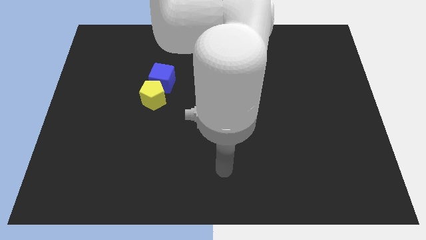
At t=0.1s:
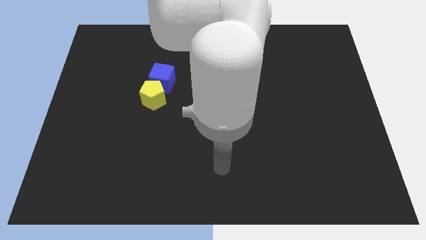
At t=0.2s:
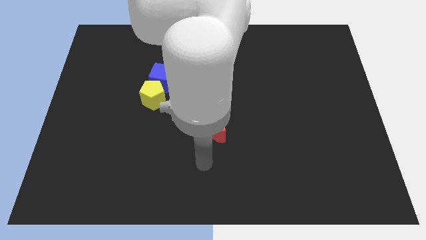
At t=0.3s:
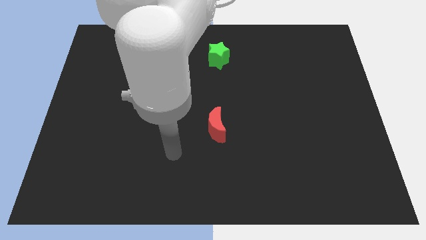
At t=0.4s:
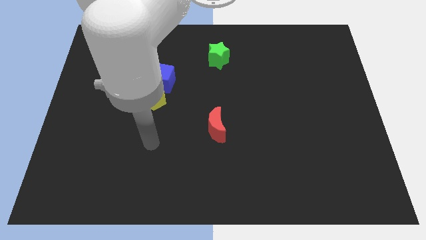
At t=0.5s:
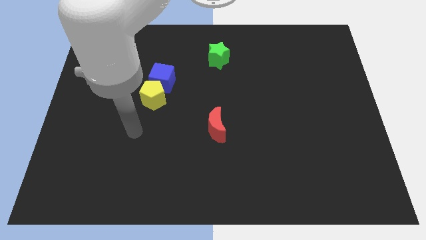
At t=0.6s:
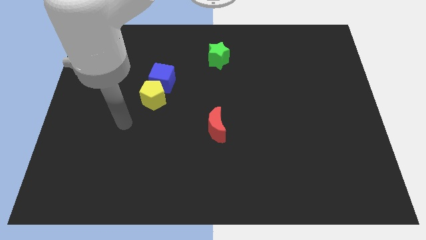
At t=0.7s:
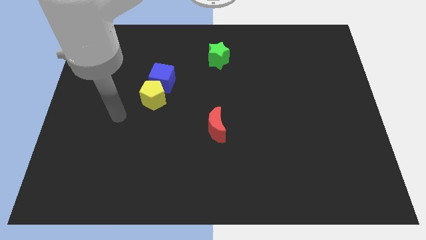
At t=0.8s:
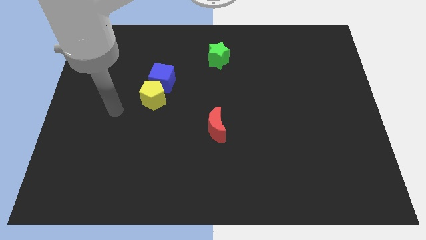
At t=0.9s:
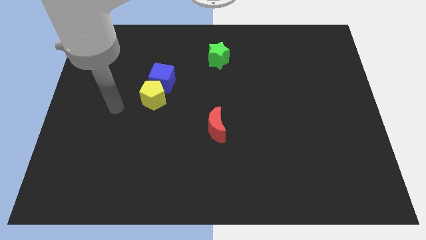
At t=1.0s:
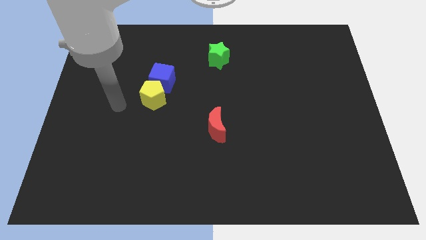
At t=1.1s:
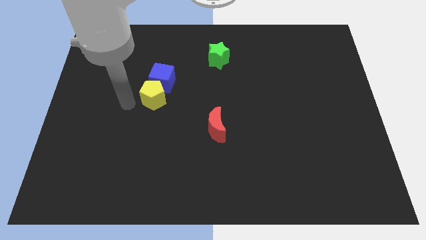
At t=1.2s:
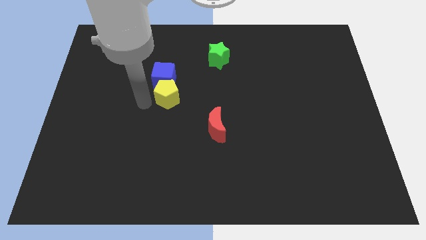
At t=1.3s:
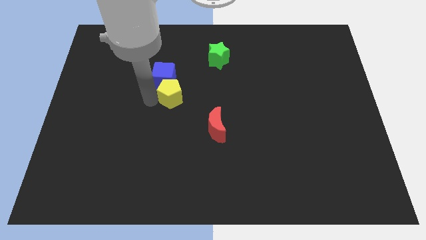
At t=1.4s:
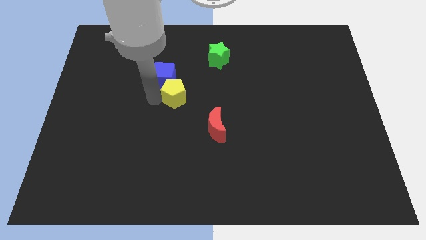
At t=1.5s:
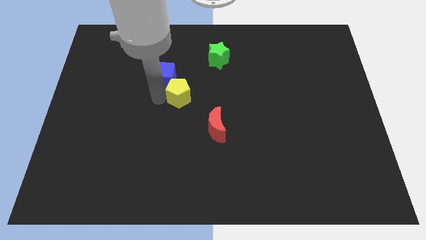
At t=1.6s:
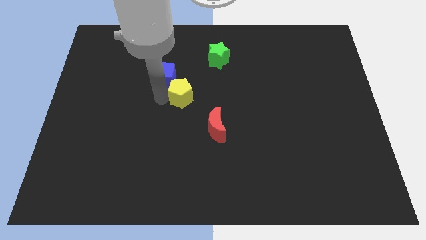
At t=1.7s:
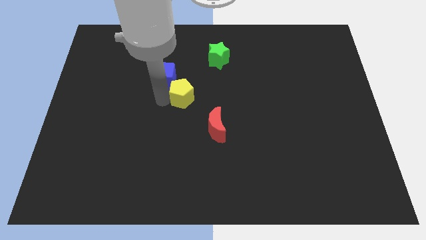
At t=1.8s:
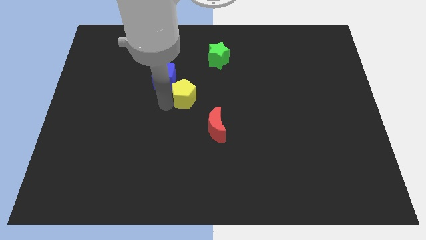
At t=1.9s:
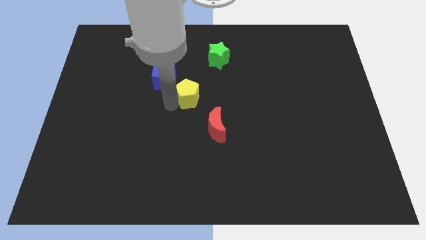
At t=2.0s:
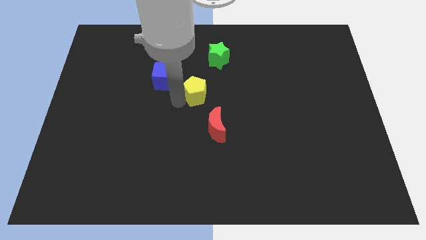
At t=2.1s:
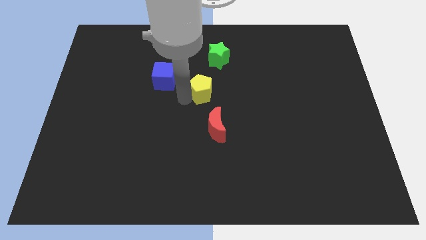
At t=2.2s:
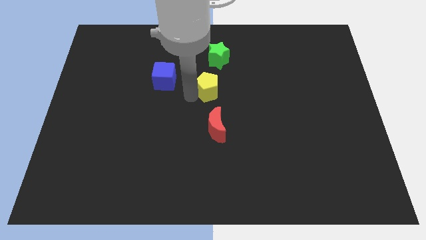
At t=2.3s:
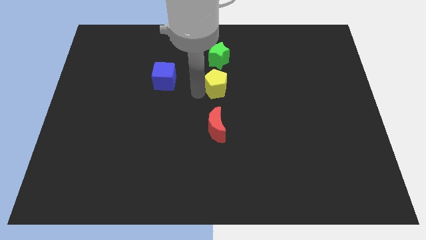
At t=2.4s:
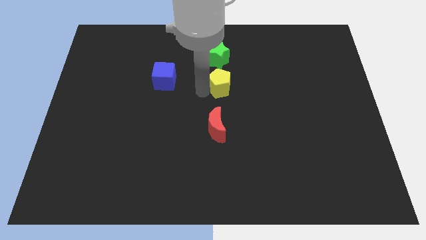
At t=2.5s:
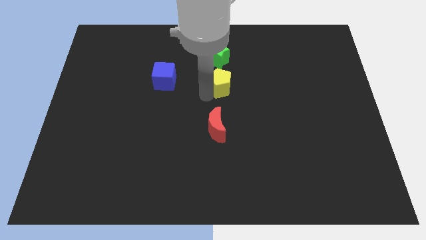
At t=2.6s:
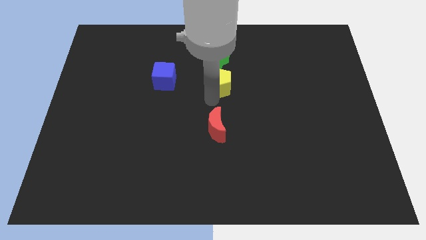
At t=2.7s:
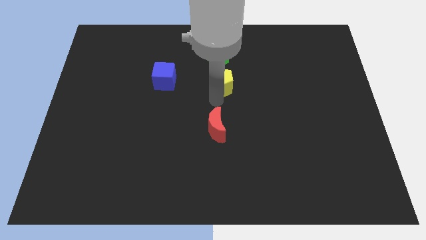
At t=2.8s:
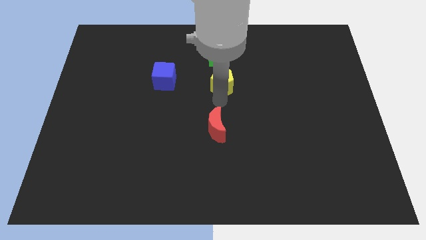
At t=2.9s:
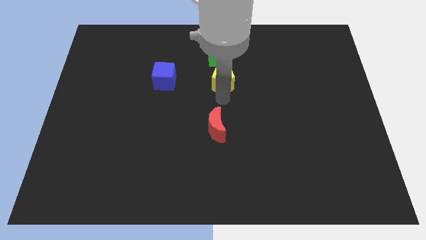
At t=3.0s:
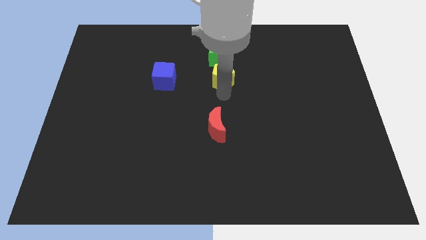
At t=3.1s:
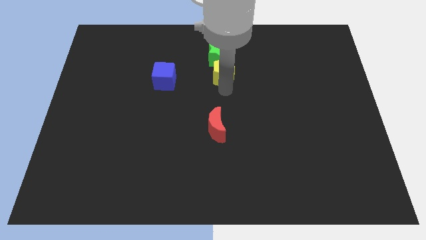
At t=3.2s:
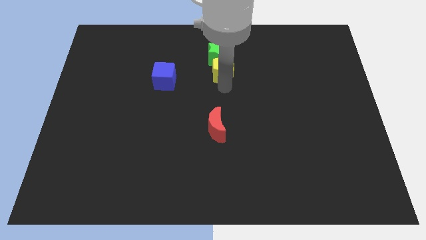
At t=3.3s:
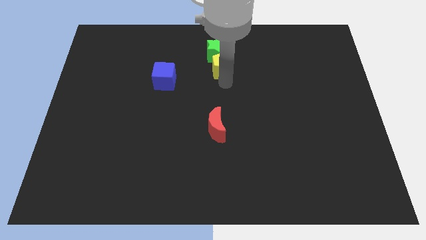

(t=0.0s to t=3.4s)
move the yellow block next to the star

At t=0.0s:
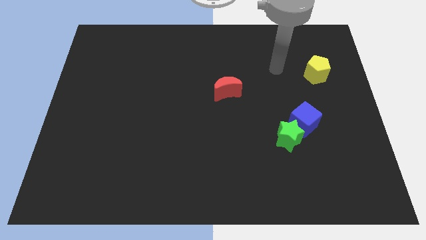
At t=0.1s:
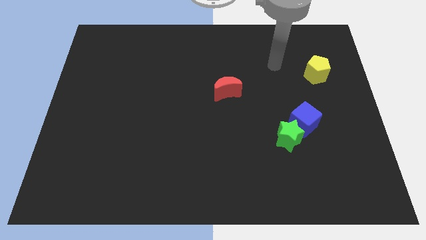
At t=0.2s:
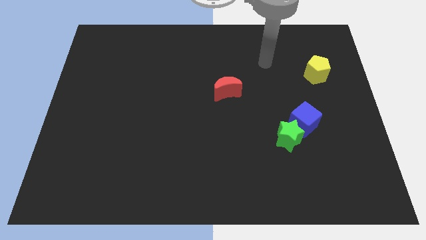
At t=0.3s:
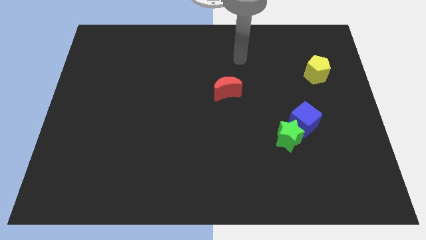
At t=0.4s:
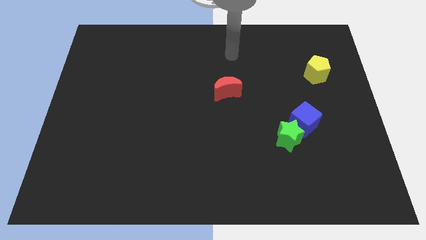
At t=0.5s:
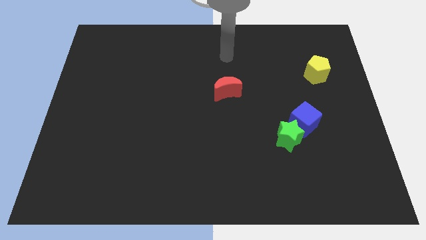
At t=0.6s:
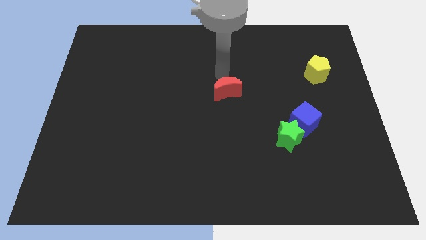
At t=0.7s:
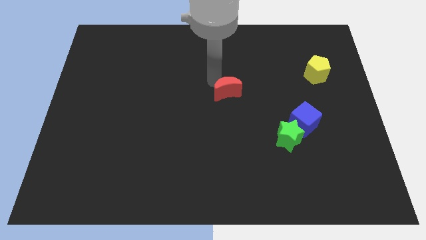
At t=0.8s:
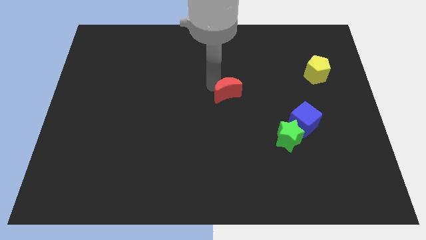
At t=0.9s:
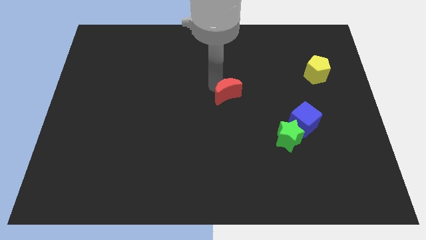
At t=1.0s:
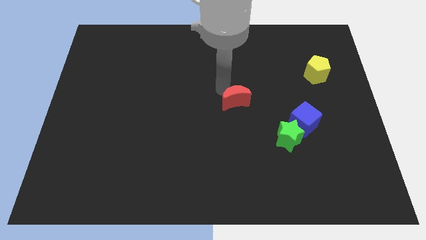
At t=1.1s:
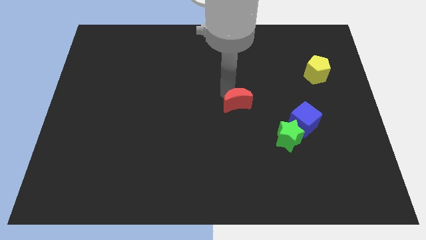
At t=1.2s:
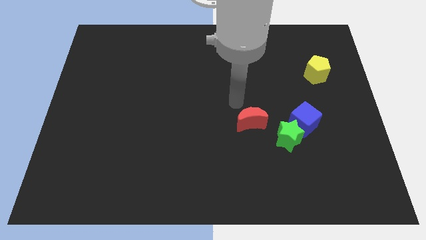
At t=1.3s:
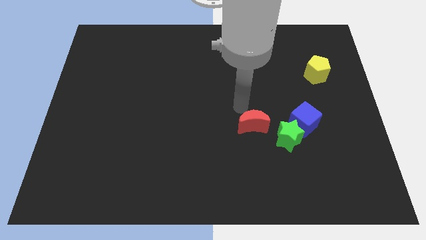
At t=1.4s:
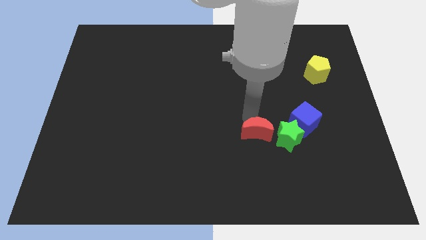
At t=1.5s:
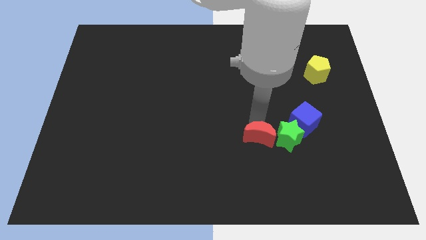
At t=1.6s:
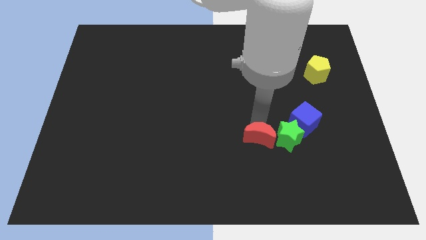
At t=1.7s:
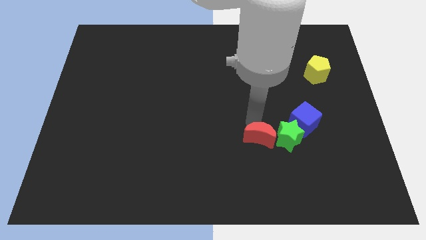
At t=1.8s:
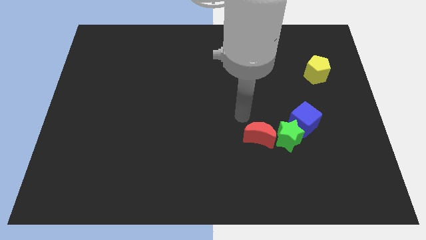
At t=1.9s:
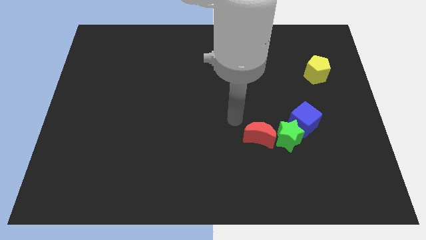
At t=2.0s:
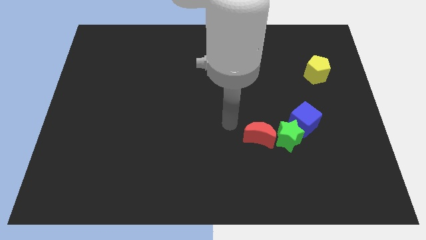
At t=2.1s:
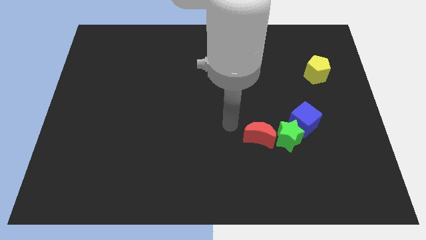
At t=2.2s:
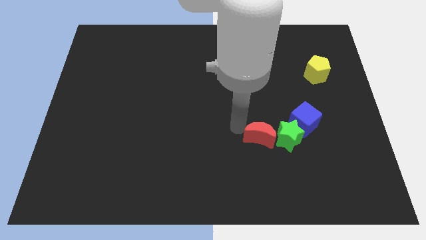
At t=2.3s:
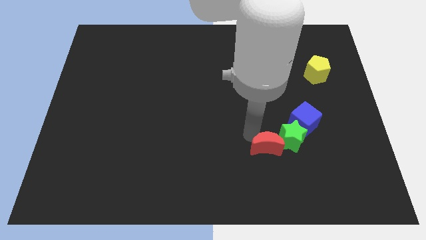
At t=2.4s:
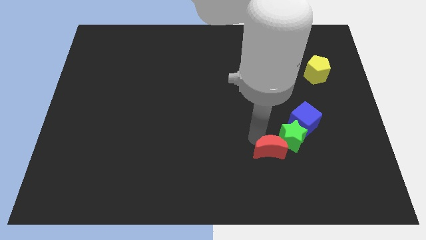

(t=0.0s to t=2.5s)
put the red block next to the green star

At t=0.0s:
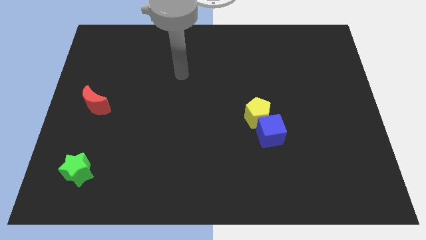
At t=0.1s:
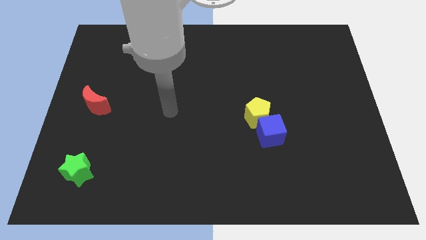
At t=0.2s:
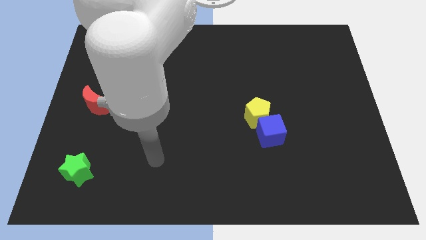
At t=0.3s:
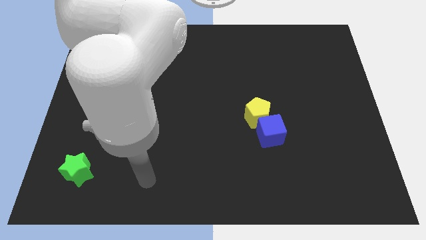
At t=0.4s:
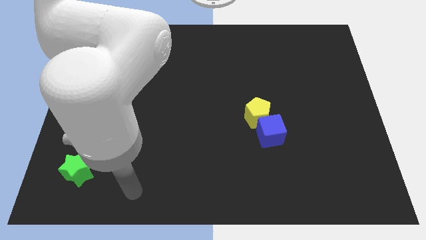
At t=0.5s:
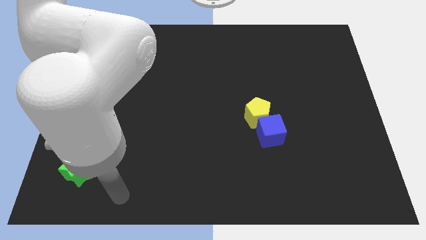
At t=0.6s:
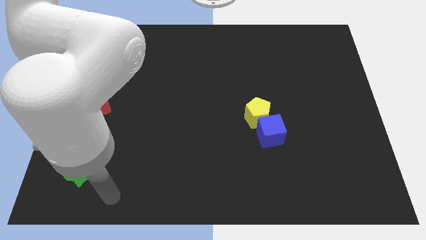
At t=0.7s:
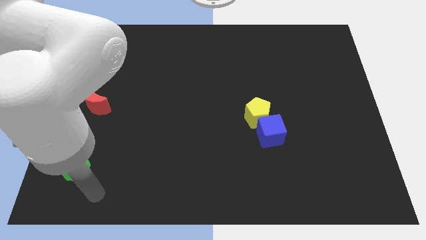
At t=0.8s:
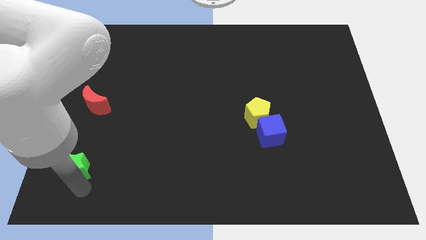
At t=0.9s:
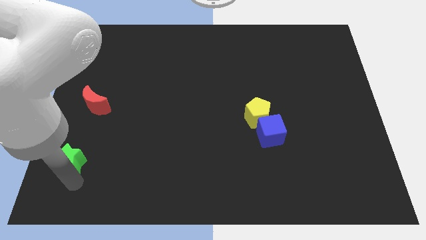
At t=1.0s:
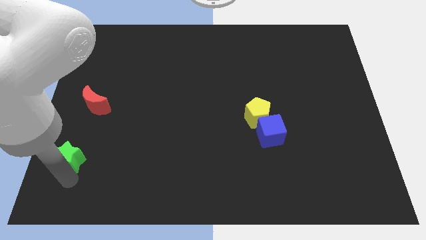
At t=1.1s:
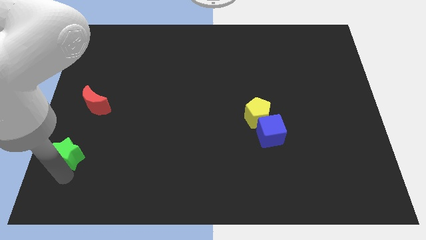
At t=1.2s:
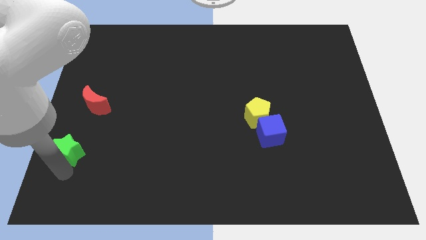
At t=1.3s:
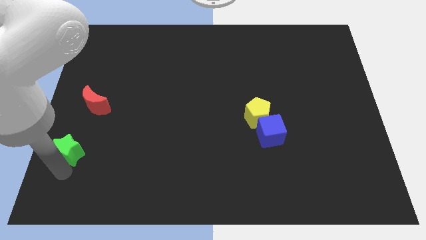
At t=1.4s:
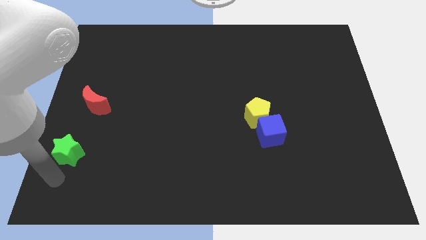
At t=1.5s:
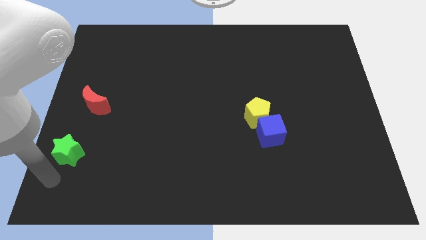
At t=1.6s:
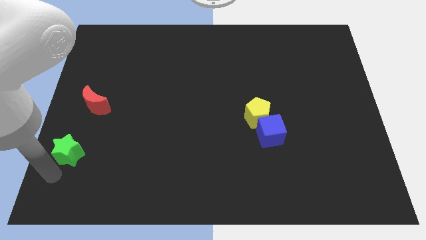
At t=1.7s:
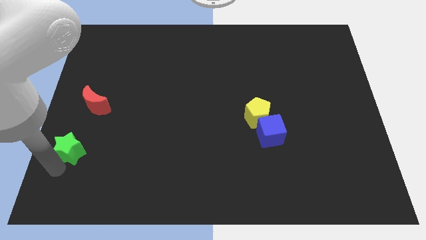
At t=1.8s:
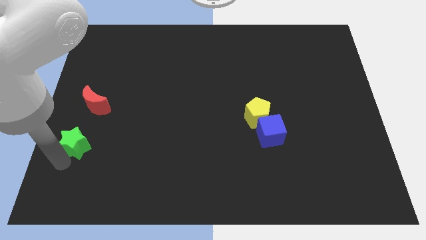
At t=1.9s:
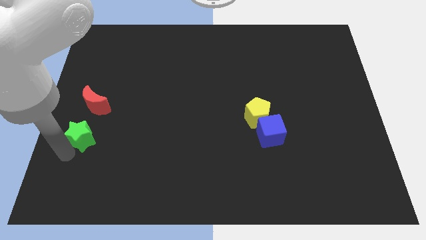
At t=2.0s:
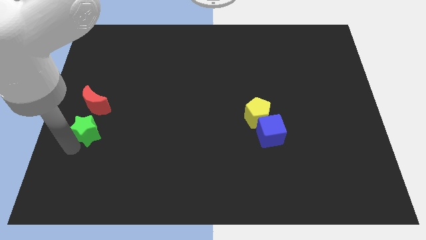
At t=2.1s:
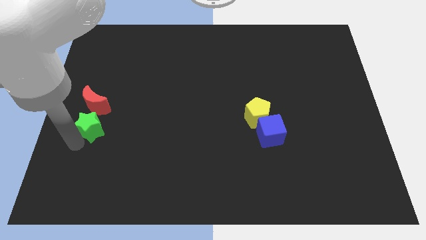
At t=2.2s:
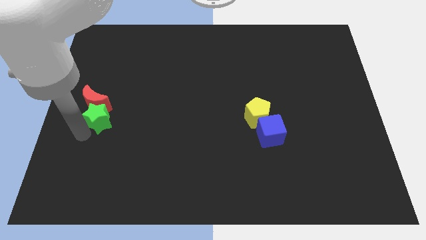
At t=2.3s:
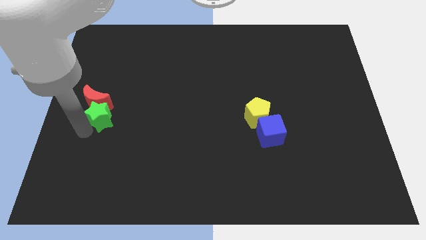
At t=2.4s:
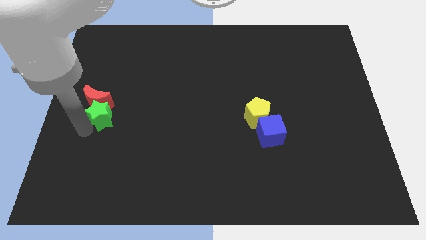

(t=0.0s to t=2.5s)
slide the green star close to the moon
